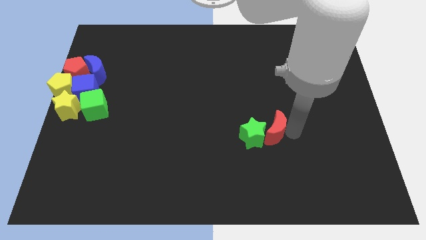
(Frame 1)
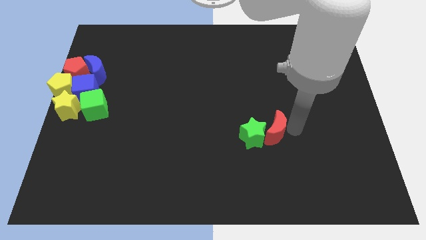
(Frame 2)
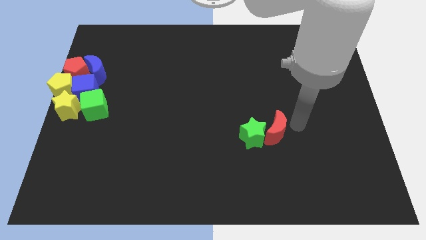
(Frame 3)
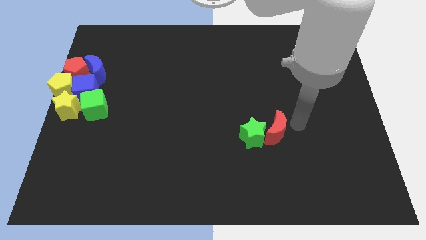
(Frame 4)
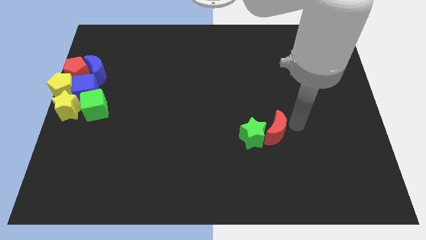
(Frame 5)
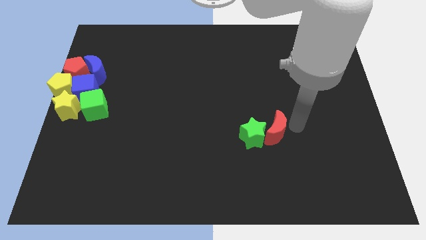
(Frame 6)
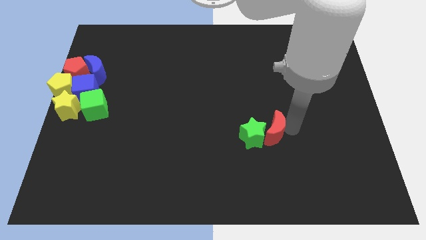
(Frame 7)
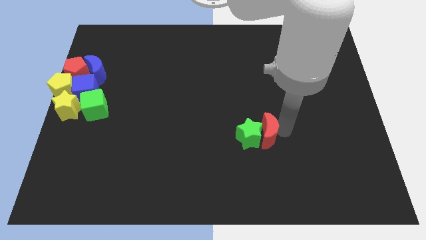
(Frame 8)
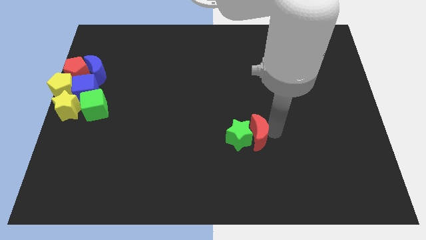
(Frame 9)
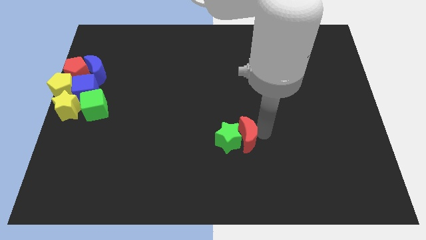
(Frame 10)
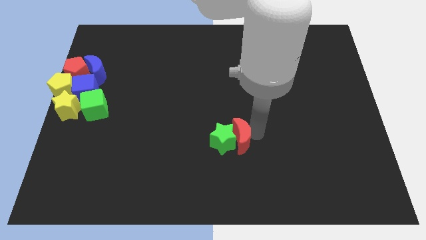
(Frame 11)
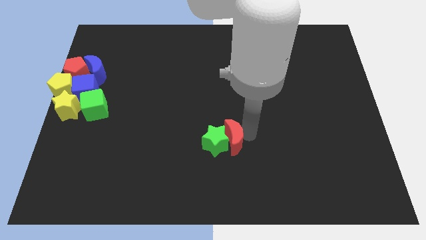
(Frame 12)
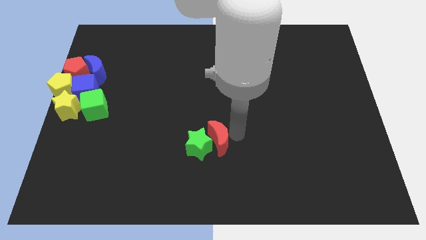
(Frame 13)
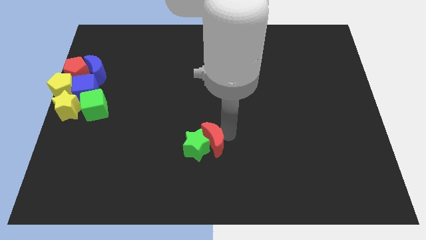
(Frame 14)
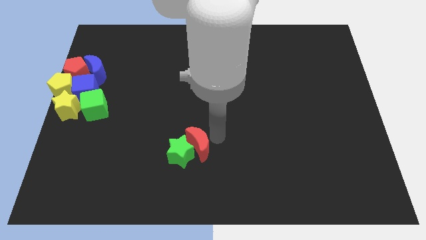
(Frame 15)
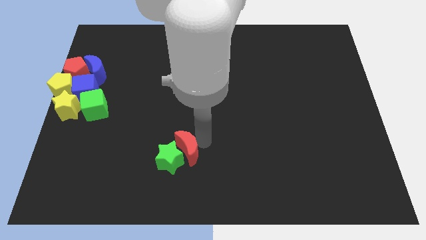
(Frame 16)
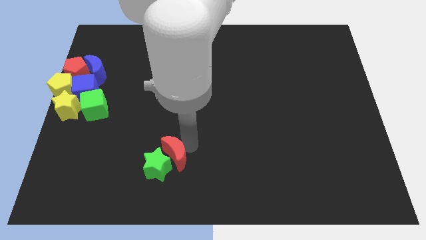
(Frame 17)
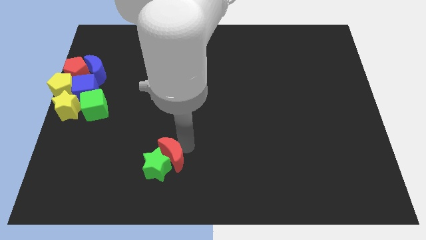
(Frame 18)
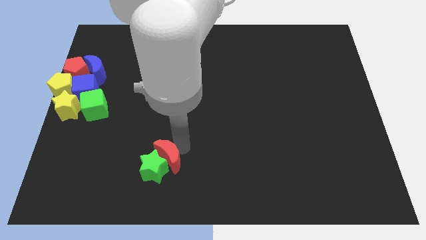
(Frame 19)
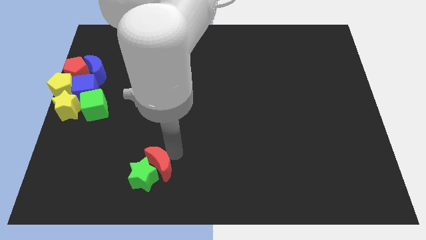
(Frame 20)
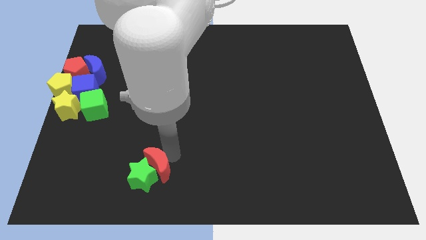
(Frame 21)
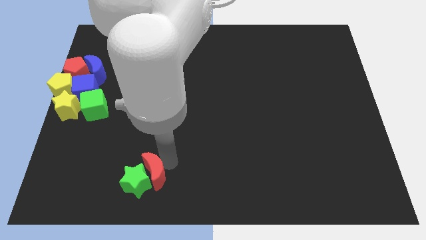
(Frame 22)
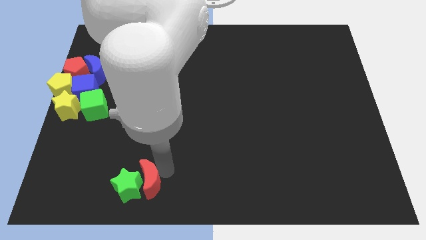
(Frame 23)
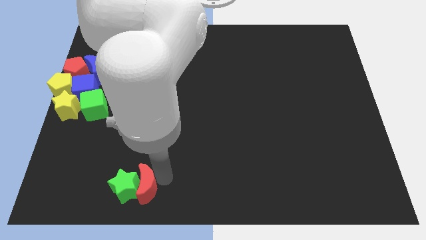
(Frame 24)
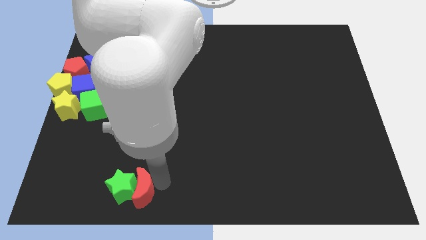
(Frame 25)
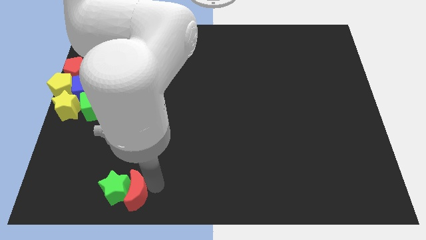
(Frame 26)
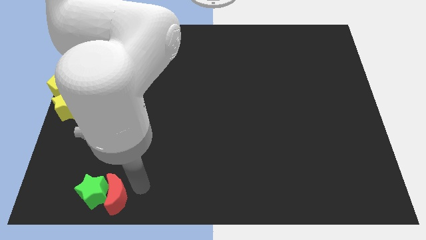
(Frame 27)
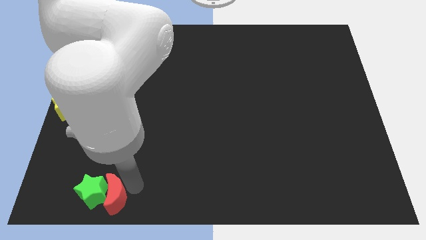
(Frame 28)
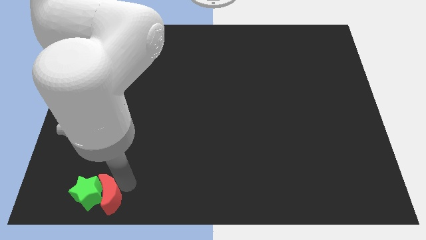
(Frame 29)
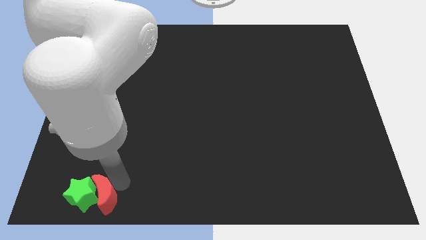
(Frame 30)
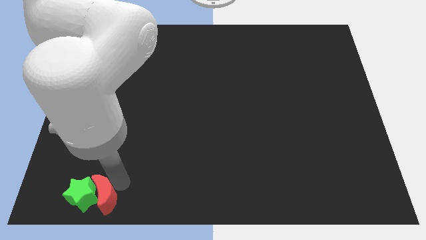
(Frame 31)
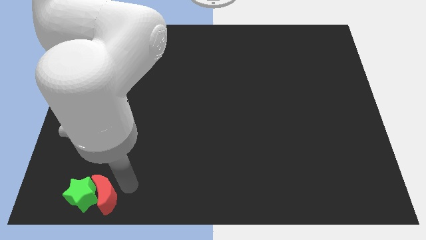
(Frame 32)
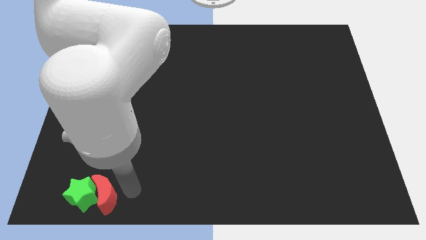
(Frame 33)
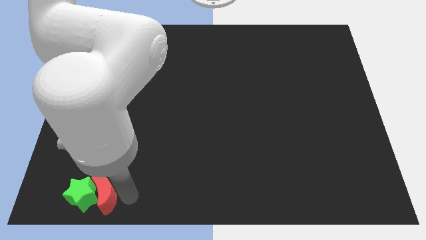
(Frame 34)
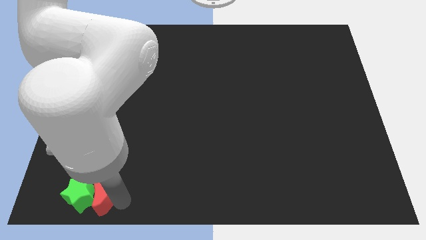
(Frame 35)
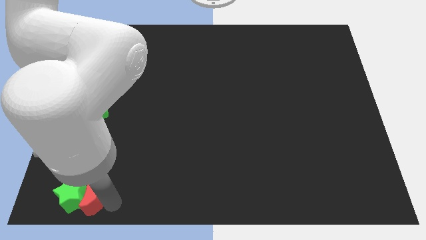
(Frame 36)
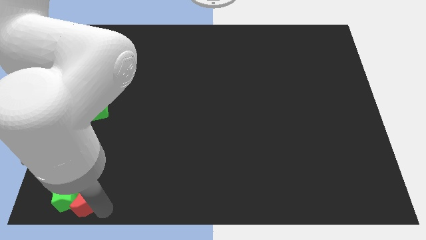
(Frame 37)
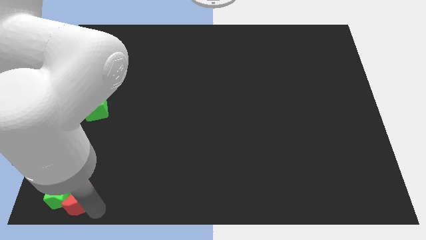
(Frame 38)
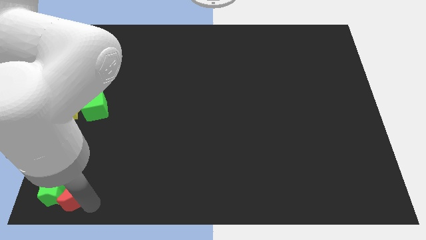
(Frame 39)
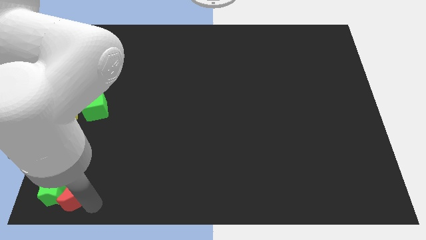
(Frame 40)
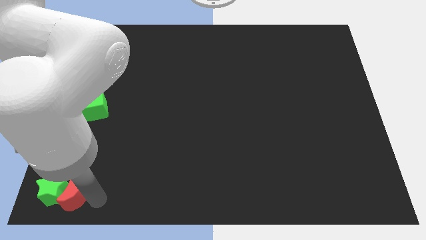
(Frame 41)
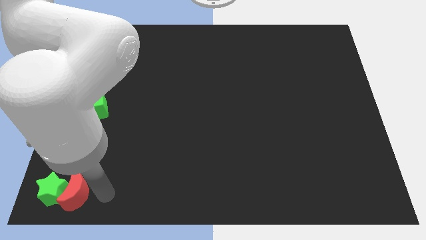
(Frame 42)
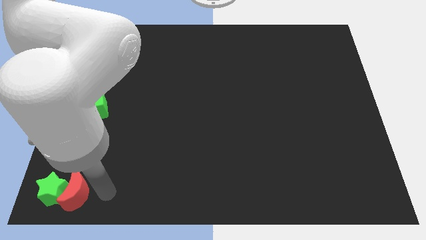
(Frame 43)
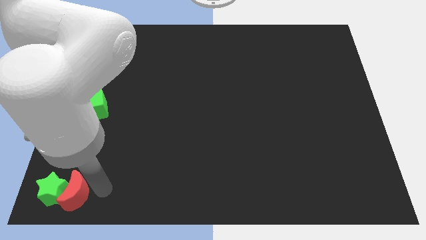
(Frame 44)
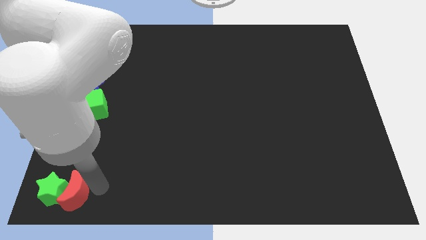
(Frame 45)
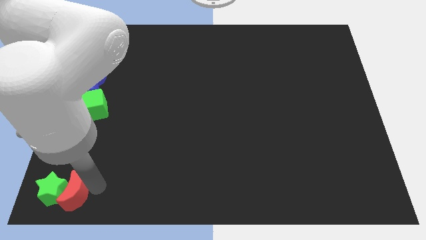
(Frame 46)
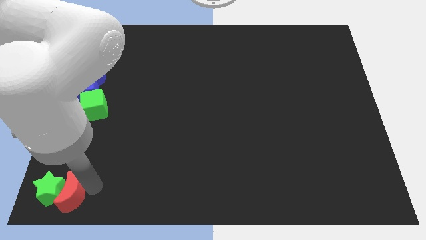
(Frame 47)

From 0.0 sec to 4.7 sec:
place the green star and red crescent vertically below the group of blocks

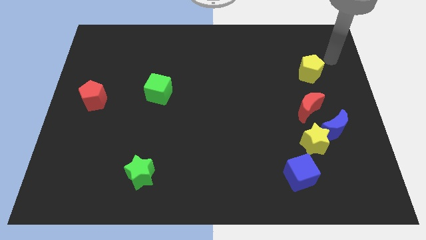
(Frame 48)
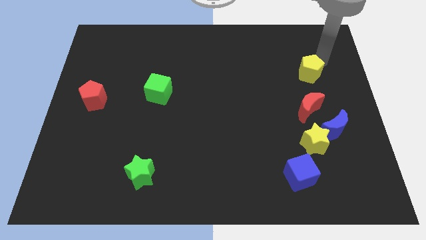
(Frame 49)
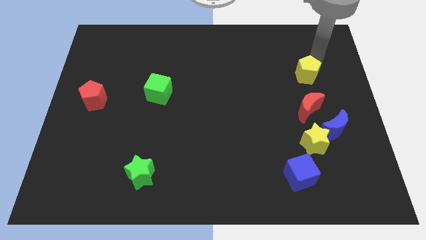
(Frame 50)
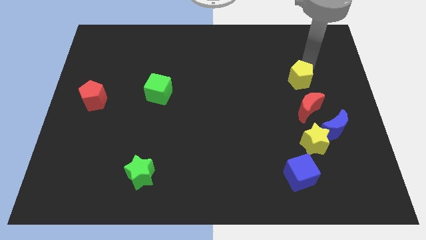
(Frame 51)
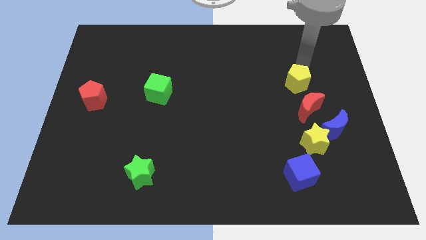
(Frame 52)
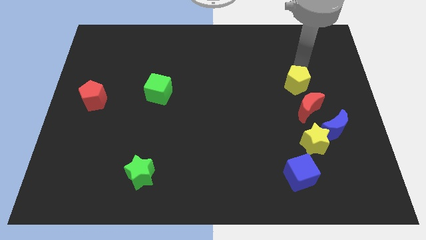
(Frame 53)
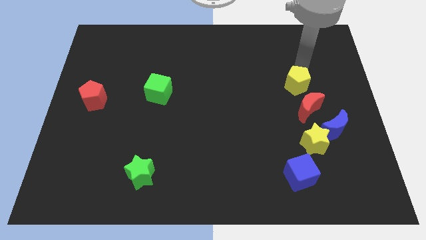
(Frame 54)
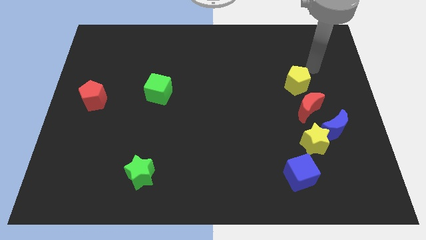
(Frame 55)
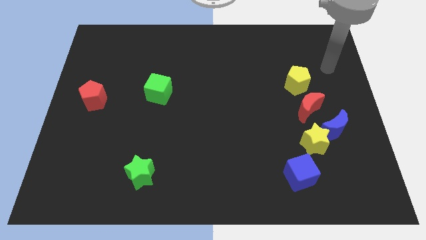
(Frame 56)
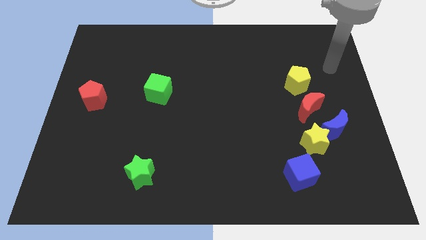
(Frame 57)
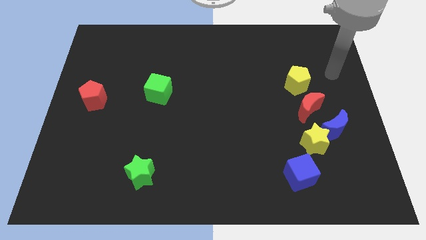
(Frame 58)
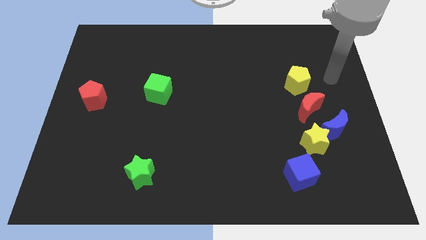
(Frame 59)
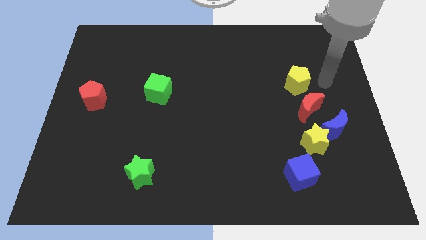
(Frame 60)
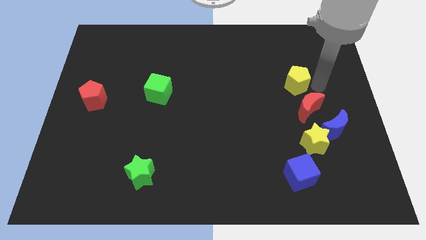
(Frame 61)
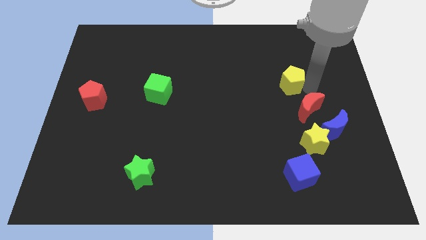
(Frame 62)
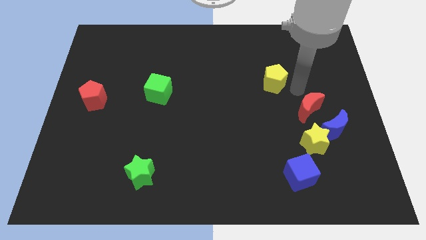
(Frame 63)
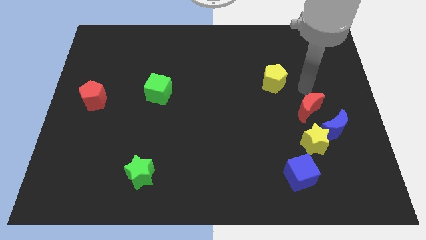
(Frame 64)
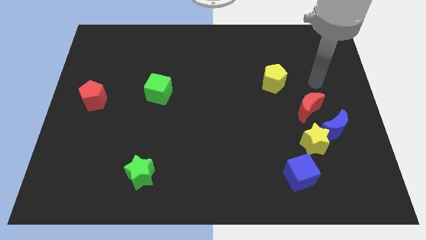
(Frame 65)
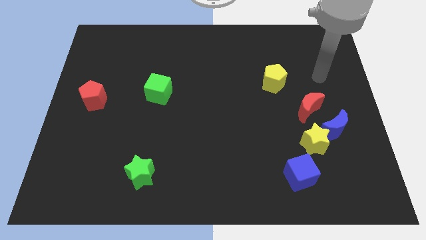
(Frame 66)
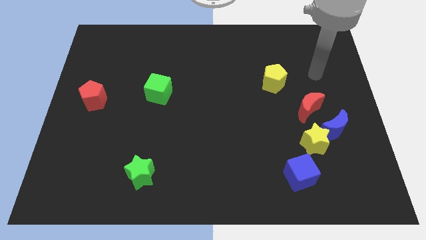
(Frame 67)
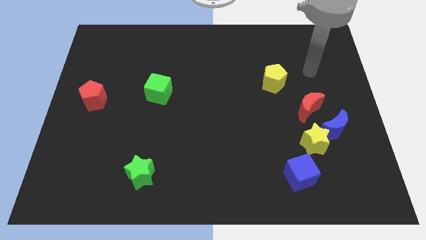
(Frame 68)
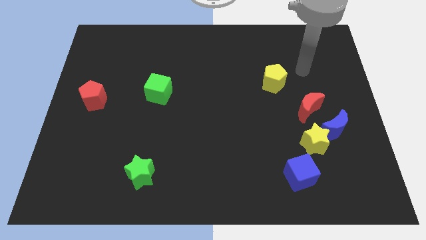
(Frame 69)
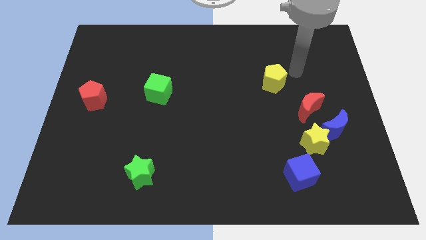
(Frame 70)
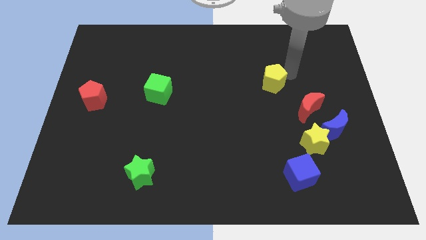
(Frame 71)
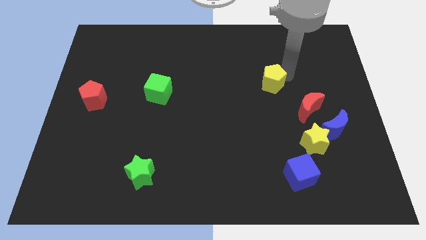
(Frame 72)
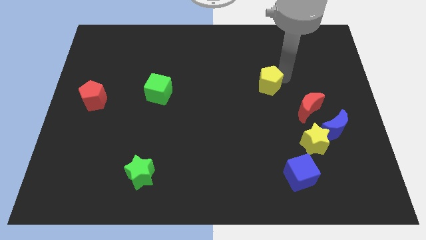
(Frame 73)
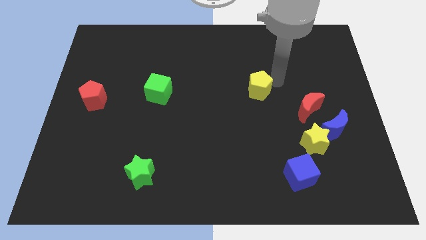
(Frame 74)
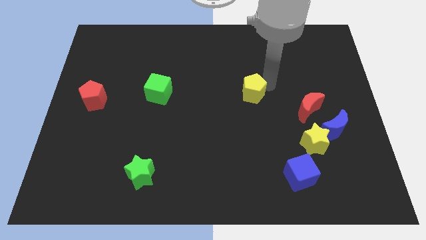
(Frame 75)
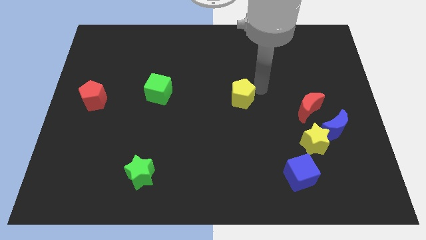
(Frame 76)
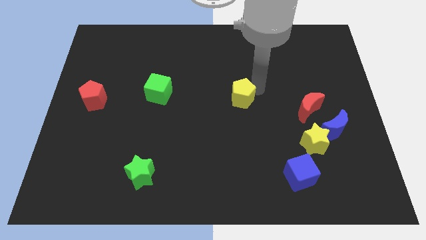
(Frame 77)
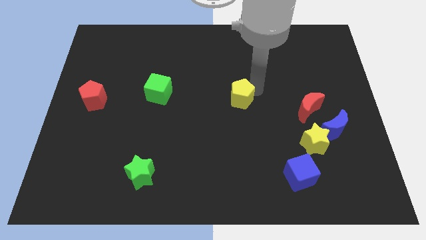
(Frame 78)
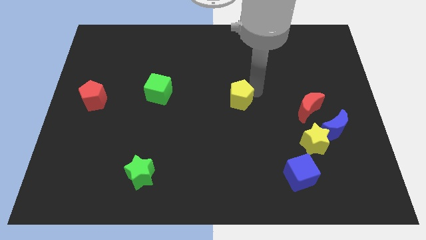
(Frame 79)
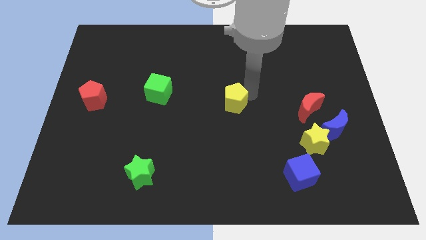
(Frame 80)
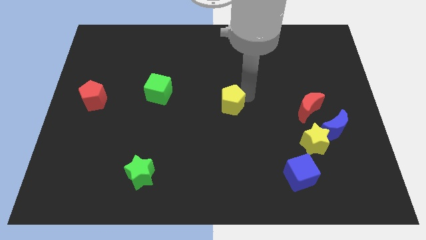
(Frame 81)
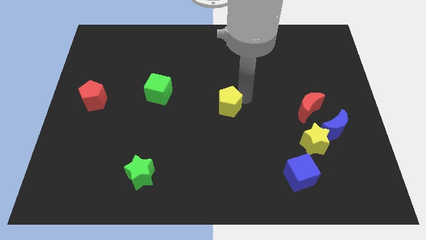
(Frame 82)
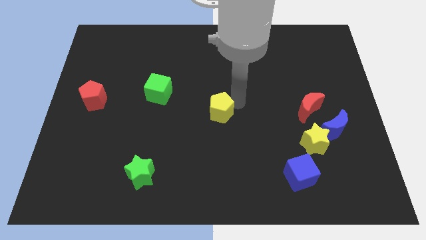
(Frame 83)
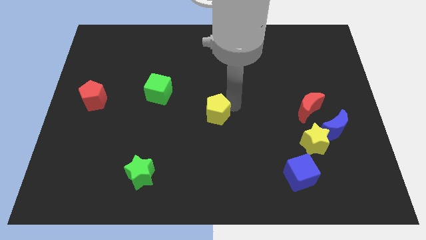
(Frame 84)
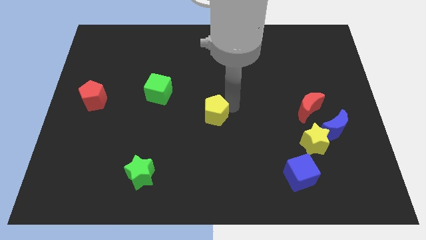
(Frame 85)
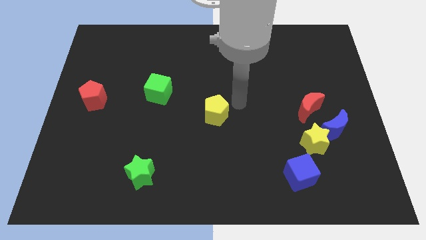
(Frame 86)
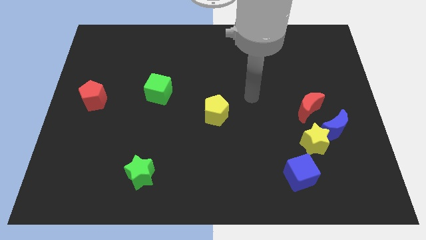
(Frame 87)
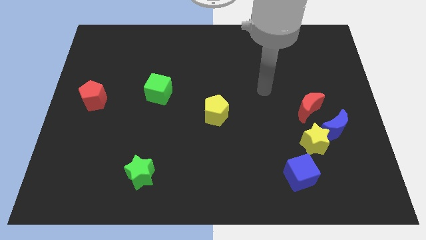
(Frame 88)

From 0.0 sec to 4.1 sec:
move the yellow pentagon to the center of the board

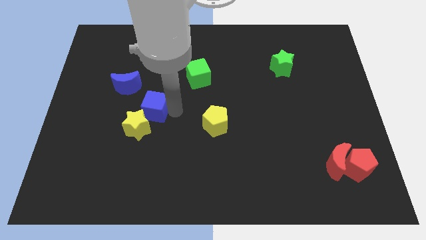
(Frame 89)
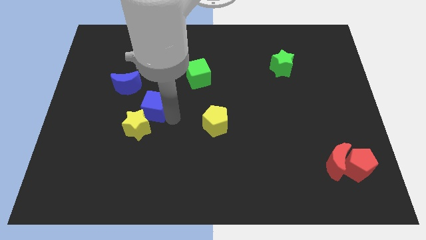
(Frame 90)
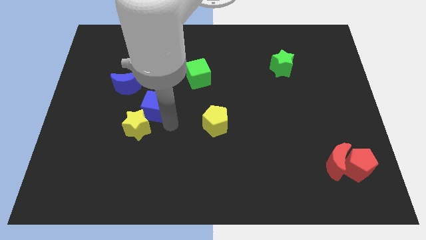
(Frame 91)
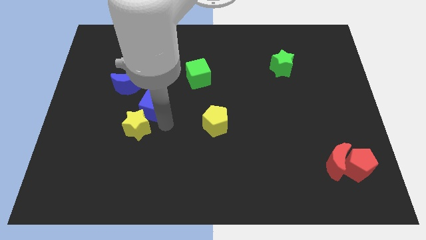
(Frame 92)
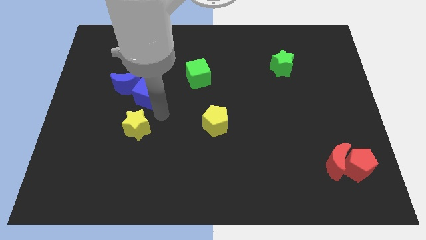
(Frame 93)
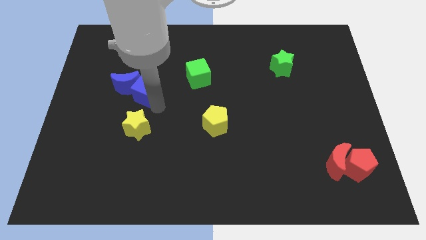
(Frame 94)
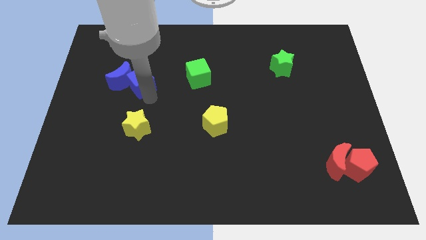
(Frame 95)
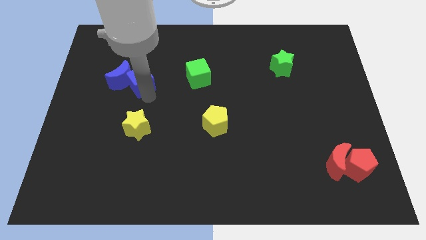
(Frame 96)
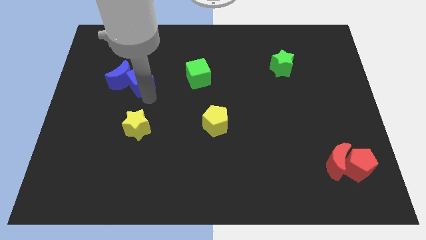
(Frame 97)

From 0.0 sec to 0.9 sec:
move the blue cube into the blue crescent
